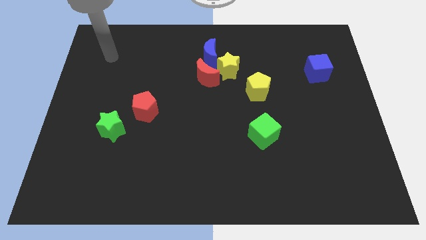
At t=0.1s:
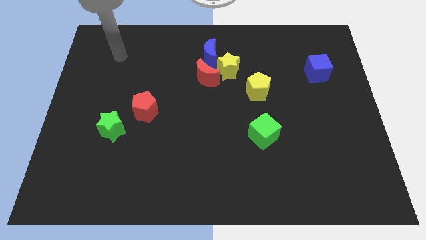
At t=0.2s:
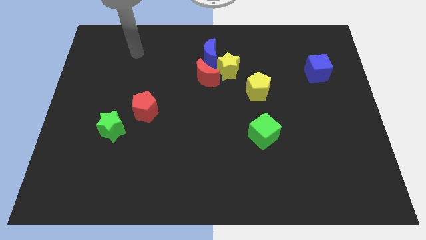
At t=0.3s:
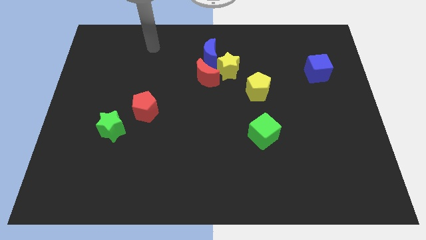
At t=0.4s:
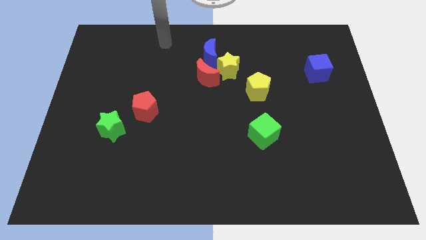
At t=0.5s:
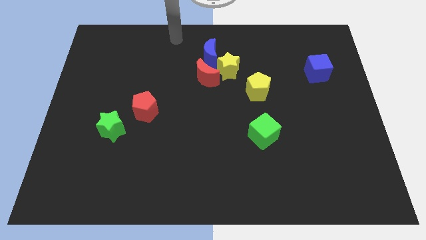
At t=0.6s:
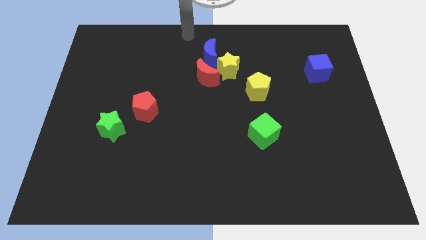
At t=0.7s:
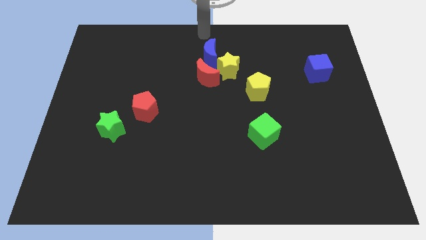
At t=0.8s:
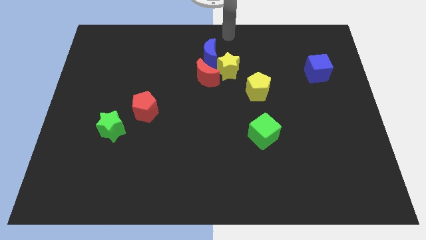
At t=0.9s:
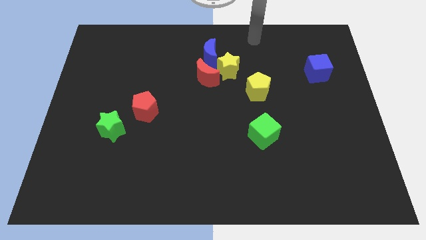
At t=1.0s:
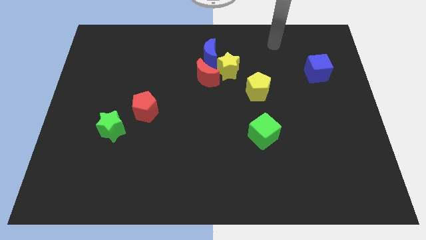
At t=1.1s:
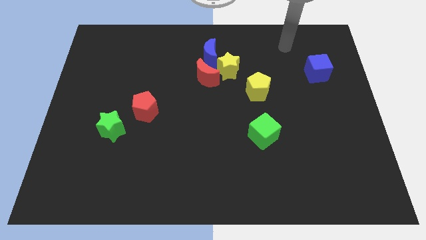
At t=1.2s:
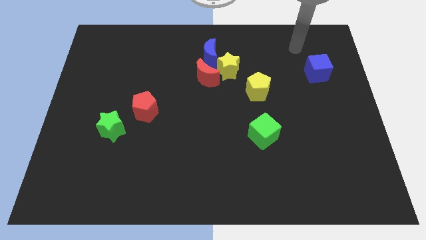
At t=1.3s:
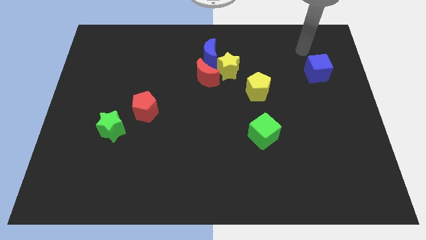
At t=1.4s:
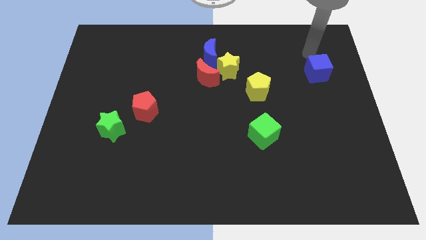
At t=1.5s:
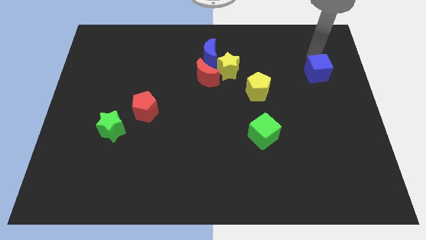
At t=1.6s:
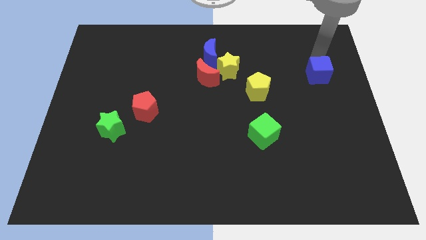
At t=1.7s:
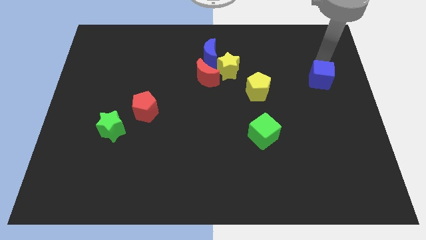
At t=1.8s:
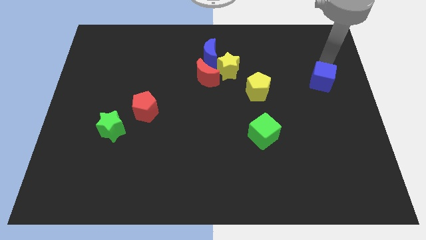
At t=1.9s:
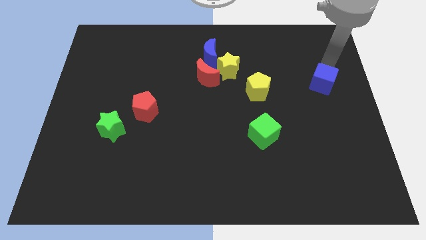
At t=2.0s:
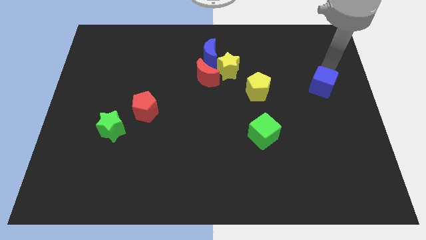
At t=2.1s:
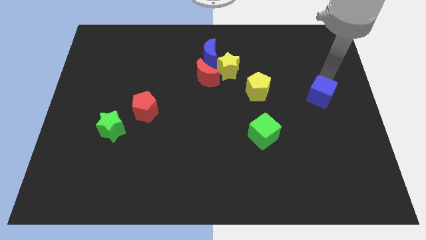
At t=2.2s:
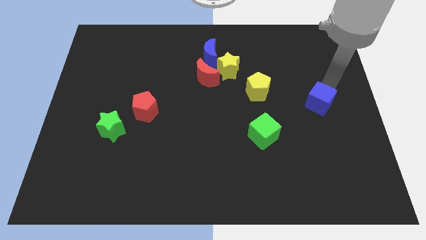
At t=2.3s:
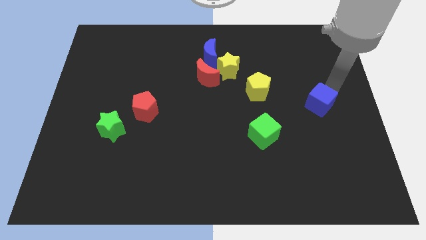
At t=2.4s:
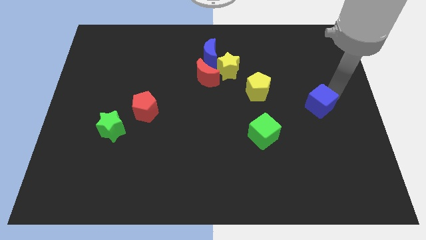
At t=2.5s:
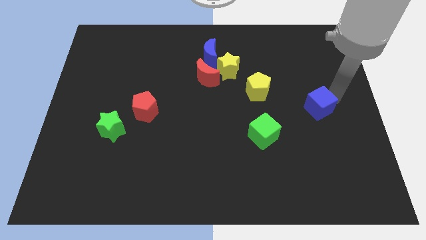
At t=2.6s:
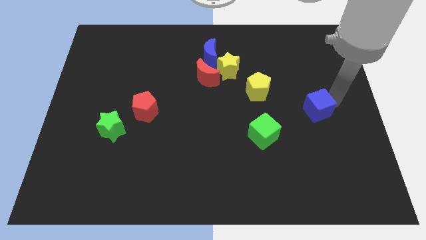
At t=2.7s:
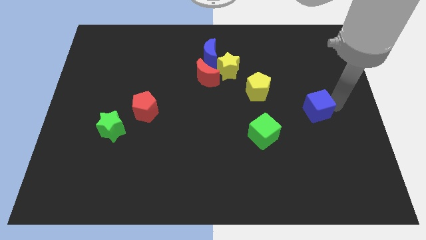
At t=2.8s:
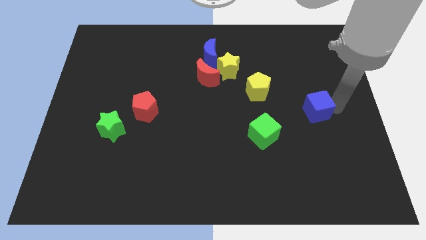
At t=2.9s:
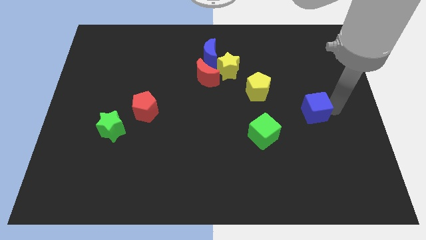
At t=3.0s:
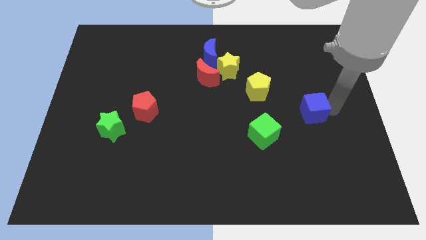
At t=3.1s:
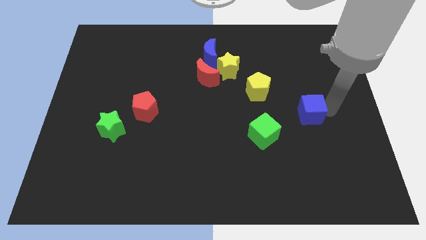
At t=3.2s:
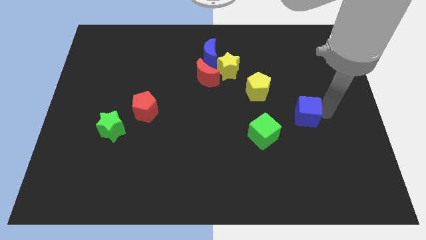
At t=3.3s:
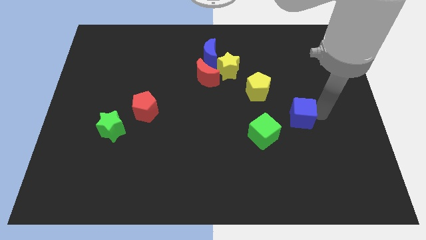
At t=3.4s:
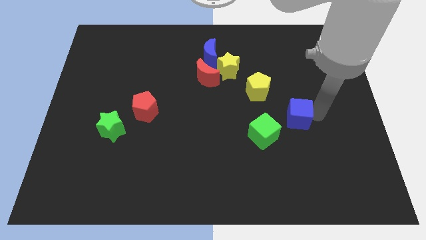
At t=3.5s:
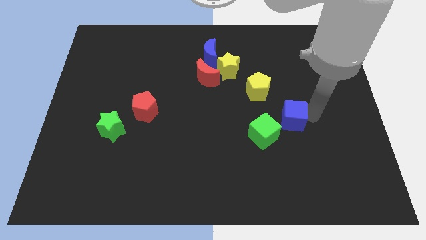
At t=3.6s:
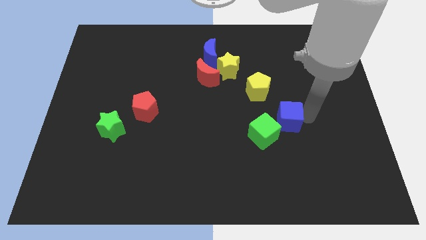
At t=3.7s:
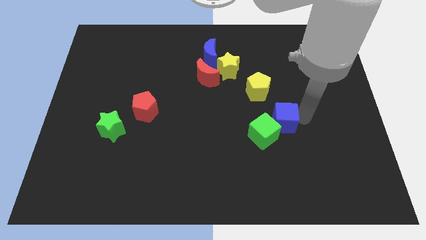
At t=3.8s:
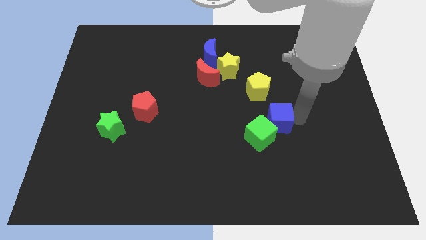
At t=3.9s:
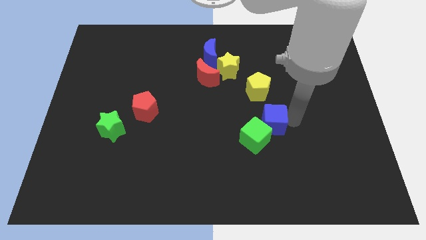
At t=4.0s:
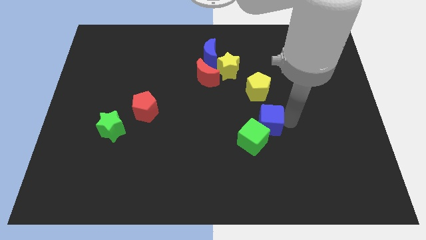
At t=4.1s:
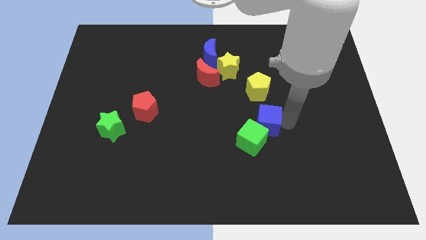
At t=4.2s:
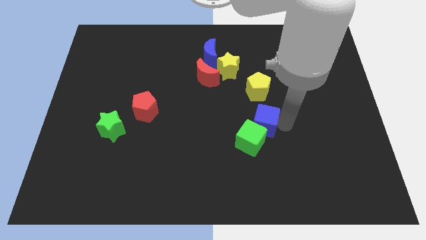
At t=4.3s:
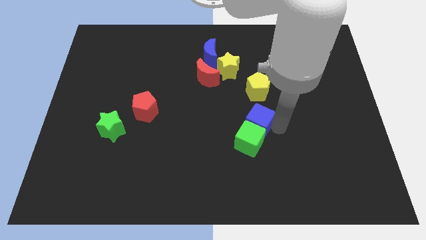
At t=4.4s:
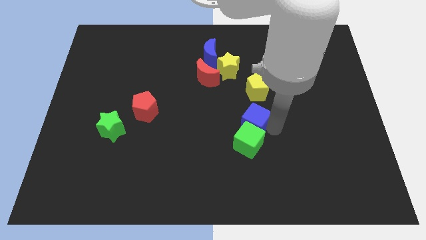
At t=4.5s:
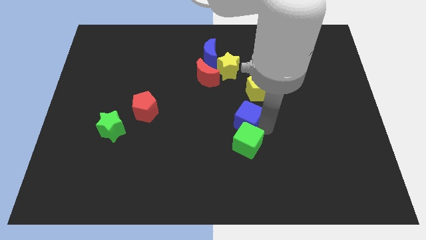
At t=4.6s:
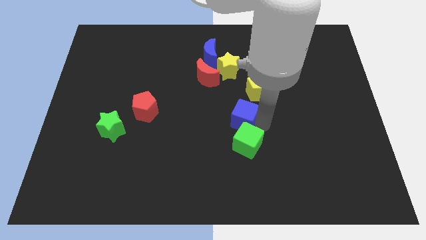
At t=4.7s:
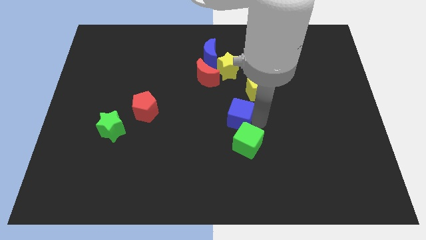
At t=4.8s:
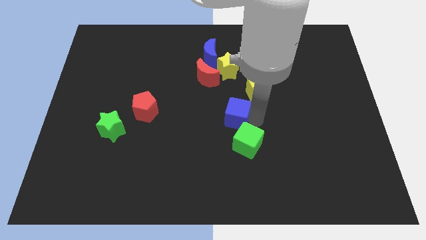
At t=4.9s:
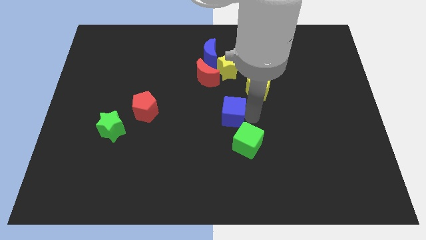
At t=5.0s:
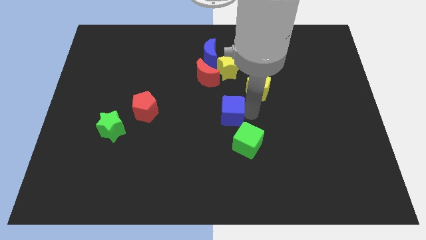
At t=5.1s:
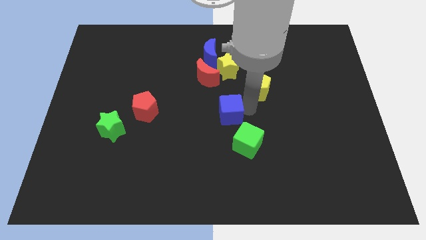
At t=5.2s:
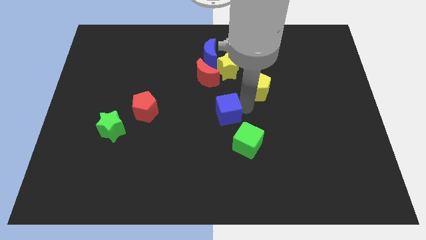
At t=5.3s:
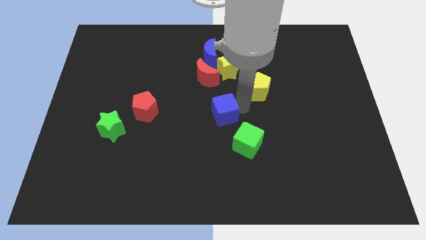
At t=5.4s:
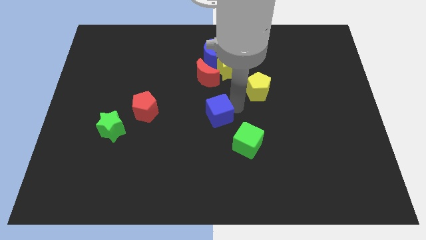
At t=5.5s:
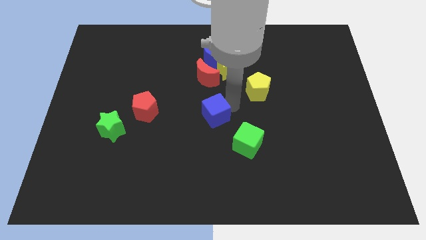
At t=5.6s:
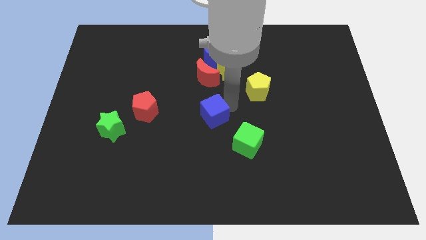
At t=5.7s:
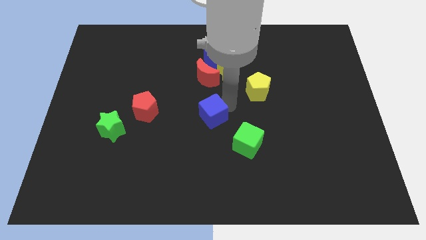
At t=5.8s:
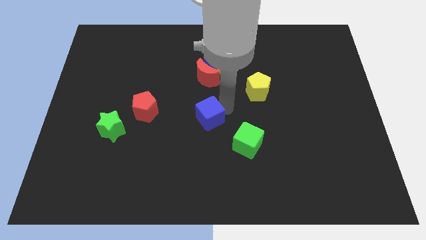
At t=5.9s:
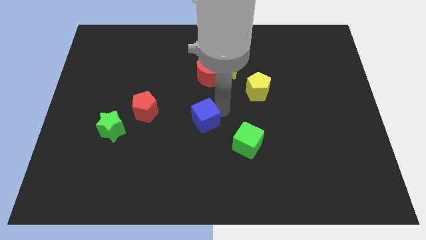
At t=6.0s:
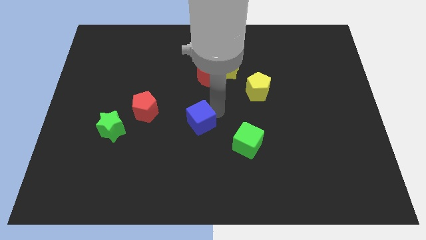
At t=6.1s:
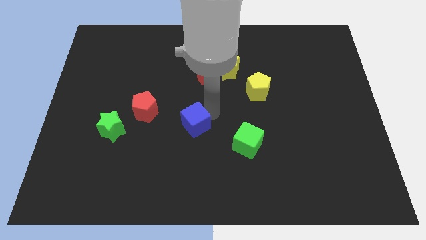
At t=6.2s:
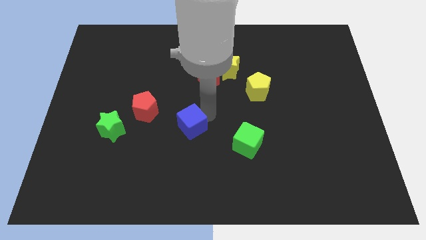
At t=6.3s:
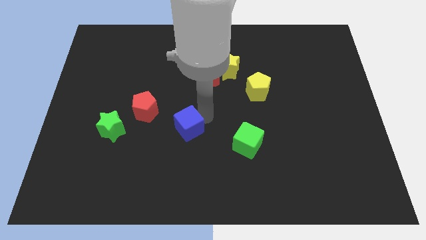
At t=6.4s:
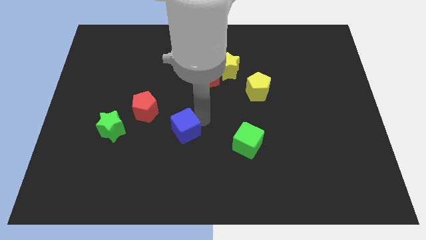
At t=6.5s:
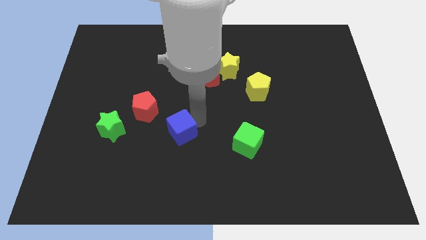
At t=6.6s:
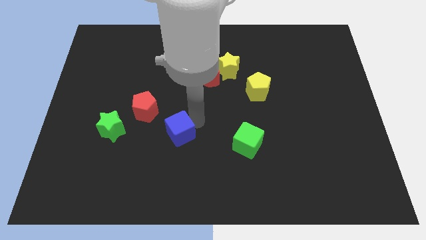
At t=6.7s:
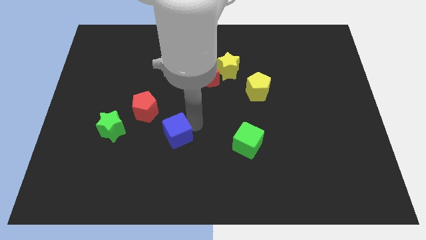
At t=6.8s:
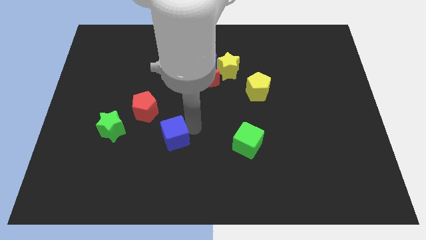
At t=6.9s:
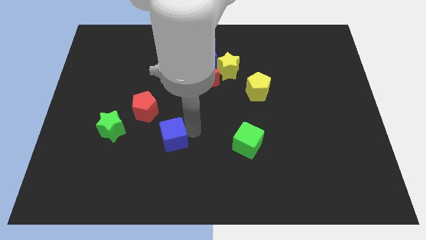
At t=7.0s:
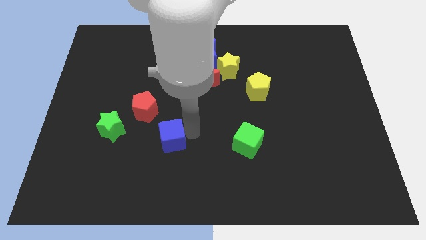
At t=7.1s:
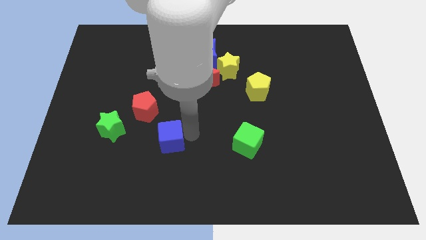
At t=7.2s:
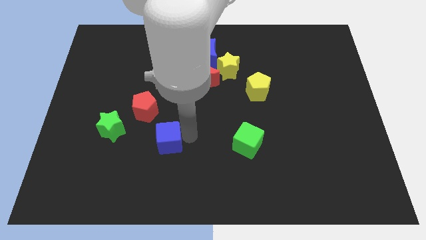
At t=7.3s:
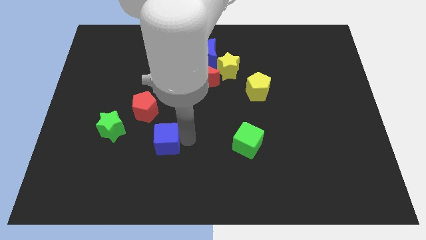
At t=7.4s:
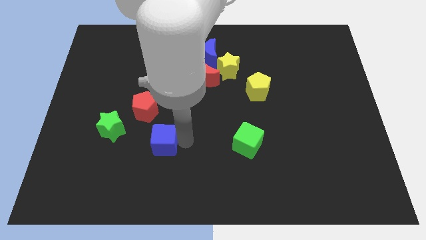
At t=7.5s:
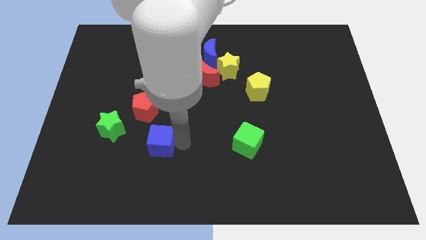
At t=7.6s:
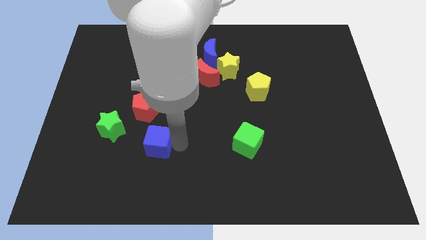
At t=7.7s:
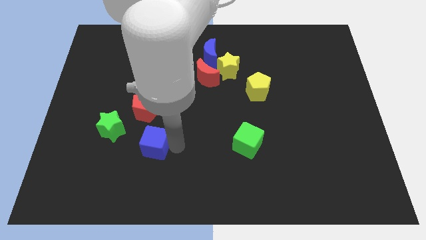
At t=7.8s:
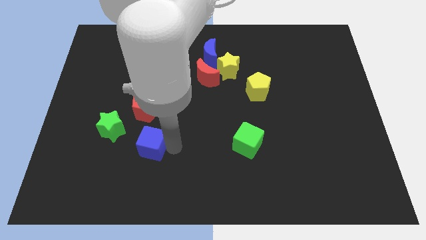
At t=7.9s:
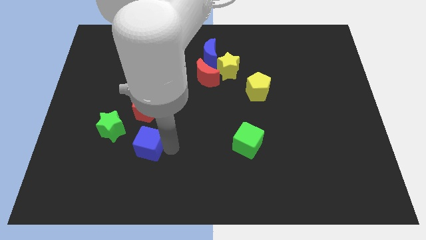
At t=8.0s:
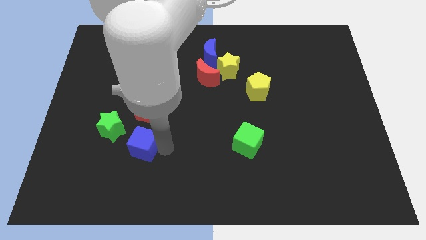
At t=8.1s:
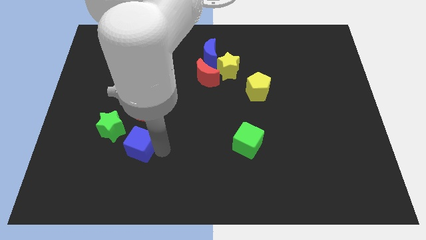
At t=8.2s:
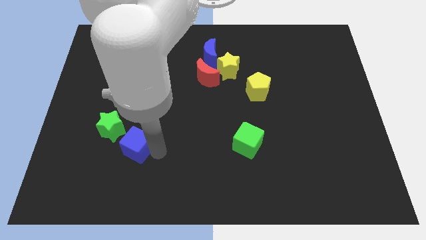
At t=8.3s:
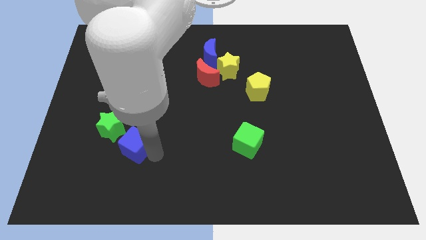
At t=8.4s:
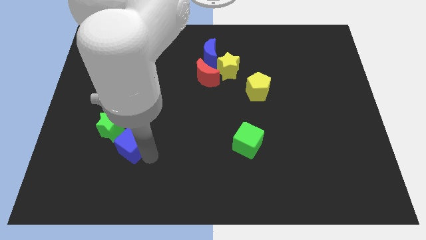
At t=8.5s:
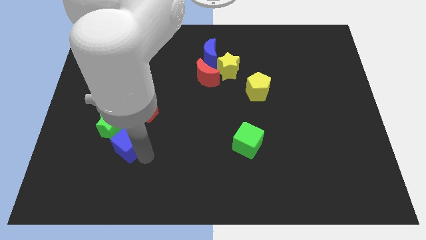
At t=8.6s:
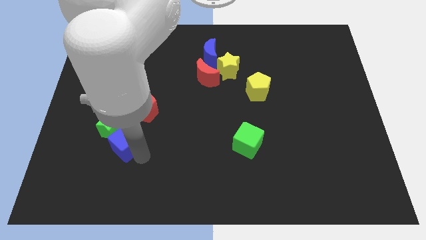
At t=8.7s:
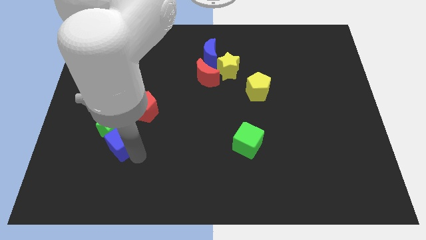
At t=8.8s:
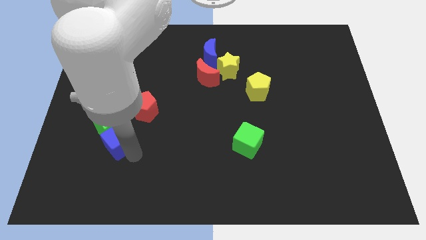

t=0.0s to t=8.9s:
push the blue cube to the green star
